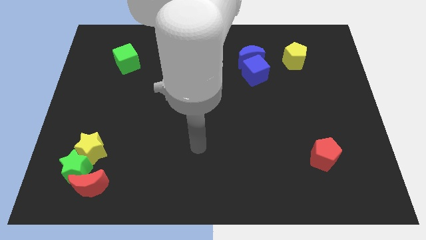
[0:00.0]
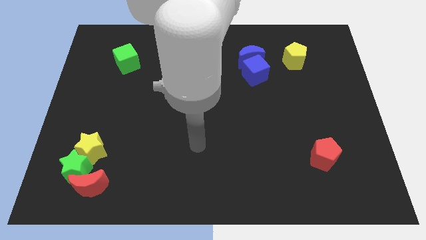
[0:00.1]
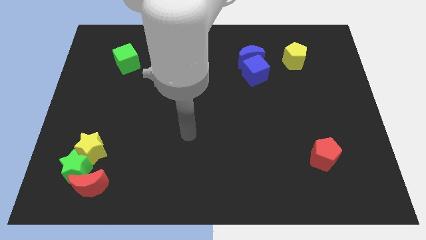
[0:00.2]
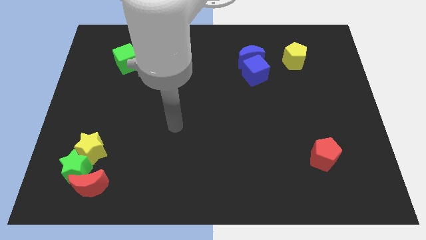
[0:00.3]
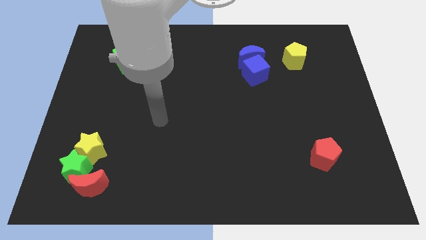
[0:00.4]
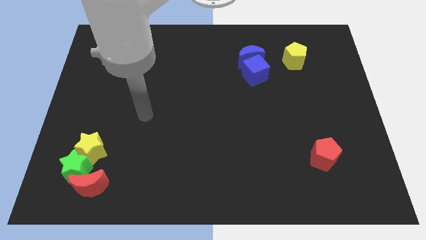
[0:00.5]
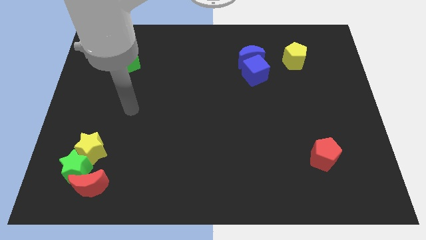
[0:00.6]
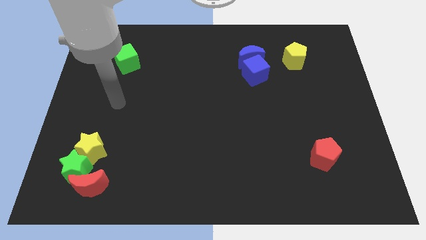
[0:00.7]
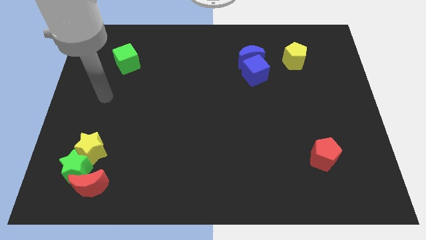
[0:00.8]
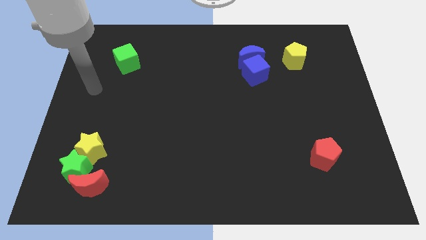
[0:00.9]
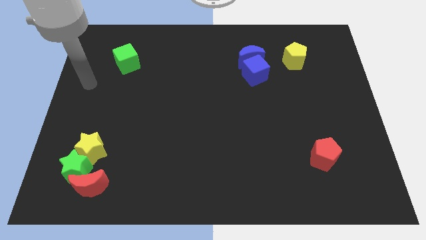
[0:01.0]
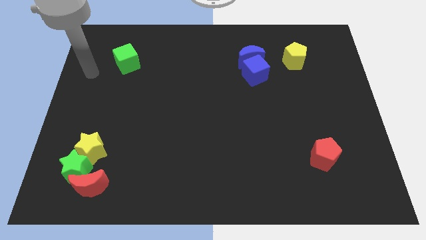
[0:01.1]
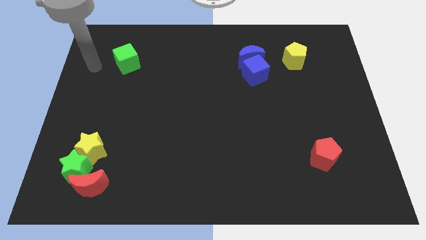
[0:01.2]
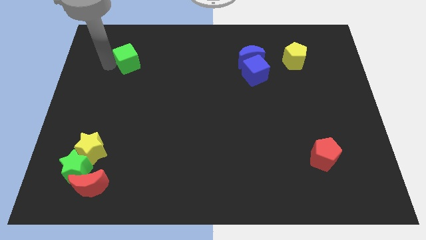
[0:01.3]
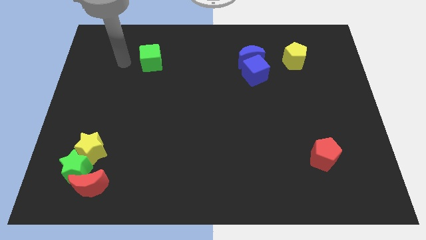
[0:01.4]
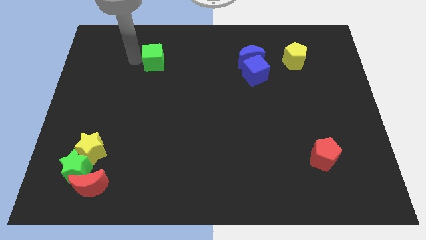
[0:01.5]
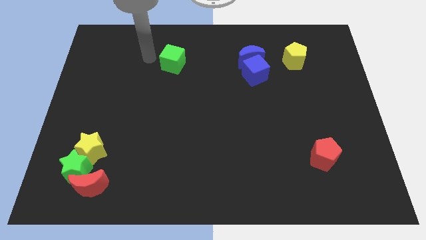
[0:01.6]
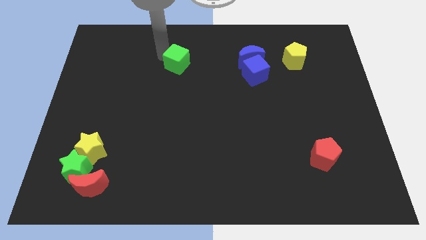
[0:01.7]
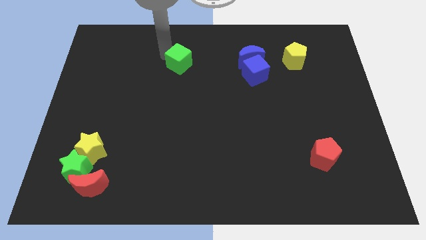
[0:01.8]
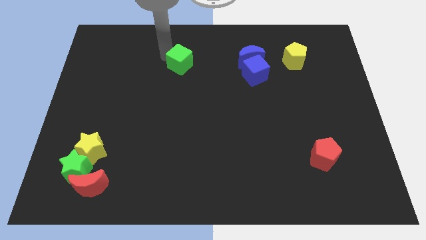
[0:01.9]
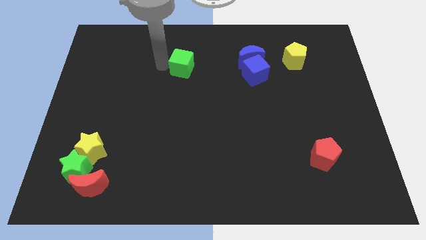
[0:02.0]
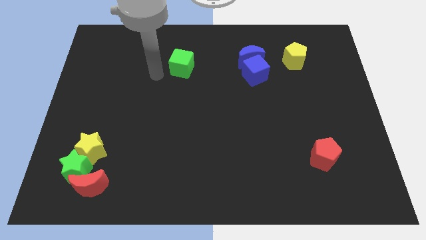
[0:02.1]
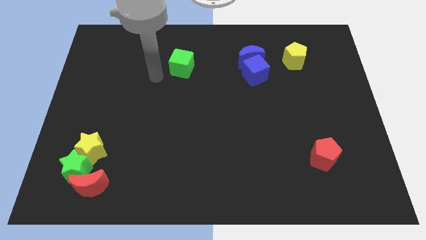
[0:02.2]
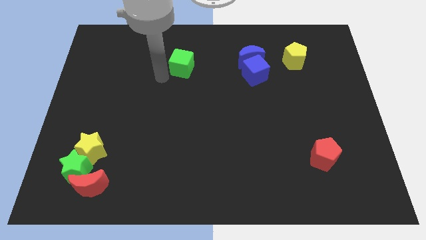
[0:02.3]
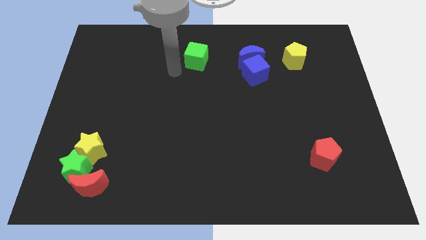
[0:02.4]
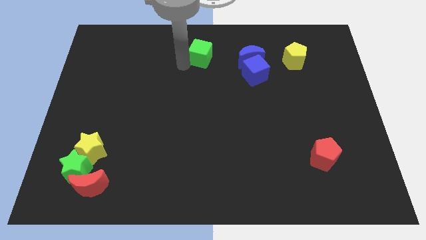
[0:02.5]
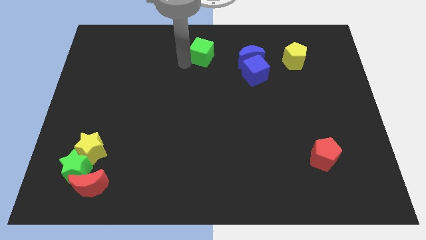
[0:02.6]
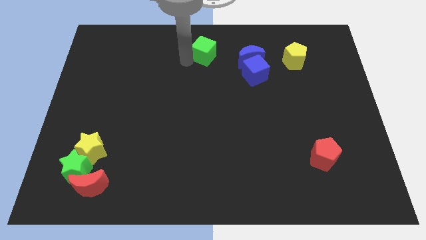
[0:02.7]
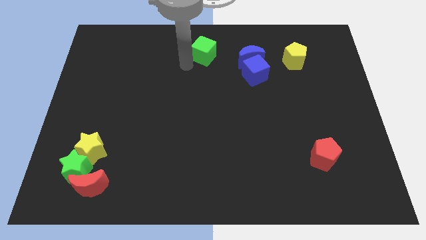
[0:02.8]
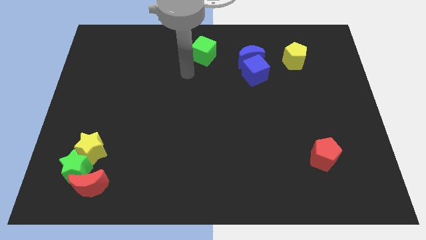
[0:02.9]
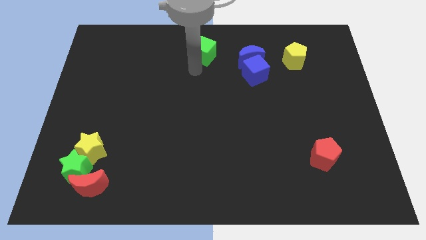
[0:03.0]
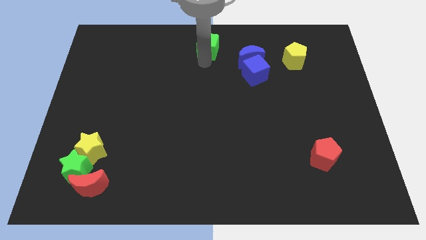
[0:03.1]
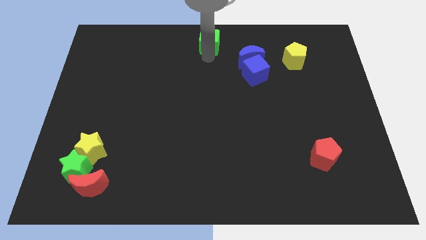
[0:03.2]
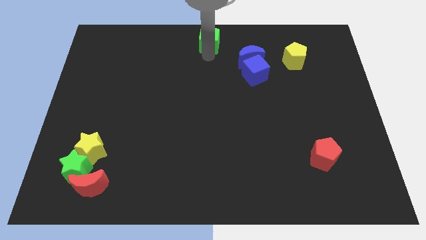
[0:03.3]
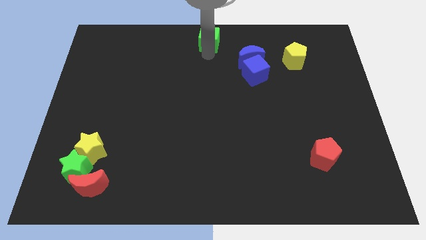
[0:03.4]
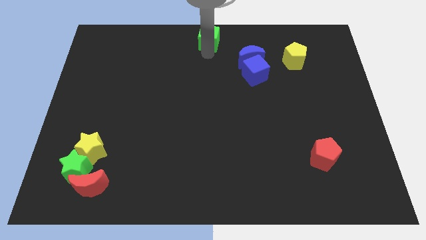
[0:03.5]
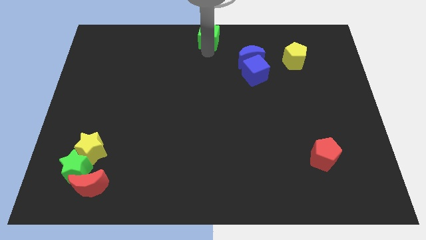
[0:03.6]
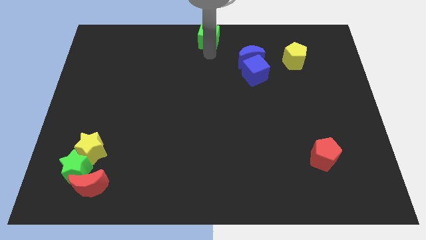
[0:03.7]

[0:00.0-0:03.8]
place the green cube at the top center of the board

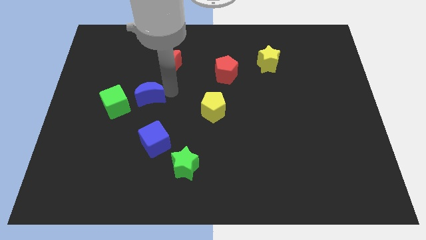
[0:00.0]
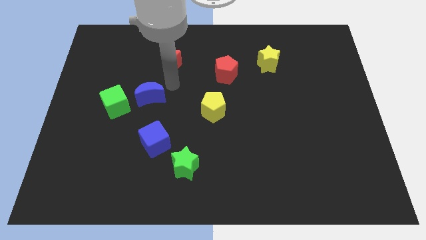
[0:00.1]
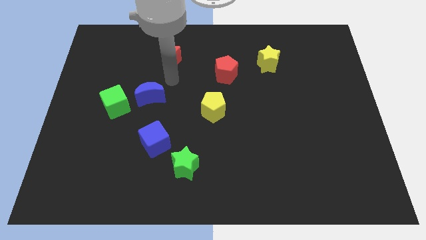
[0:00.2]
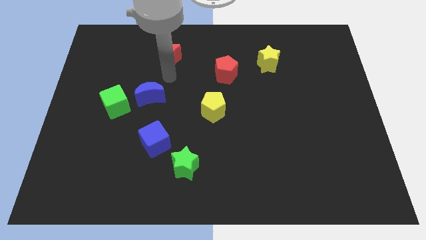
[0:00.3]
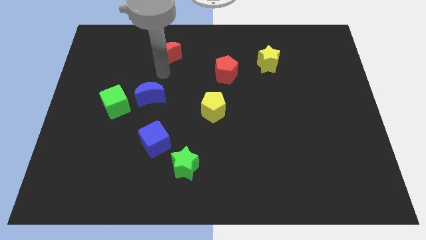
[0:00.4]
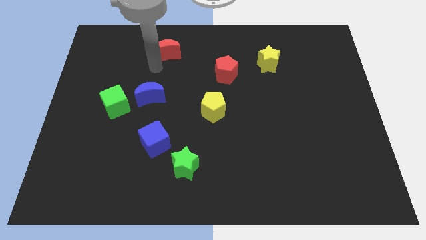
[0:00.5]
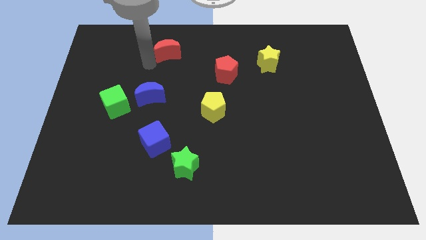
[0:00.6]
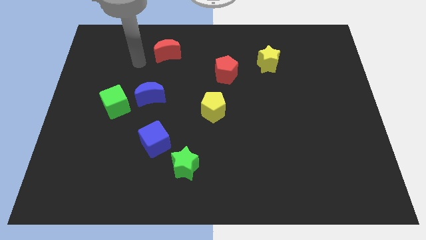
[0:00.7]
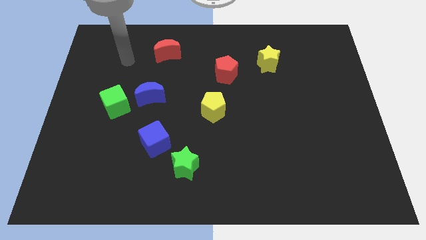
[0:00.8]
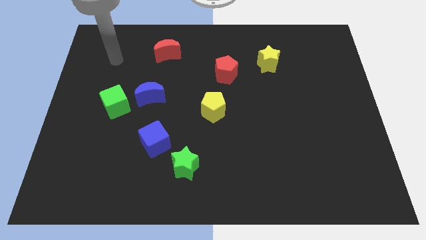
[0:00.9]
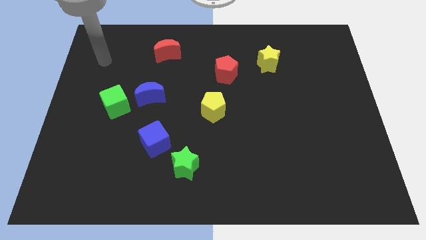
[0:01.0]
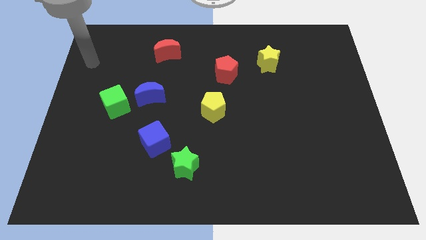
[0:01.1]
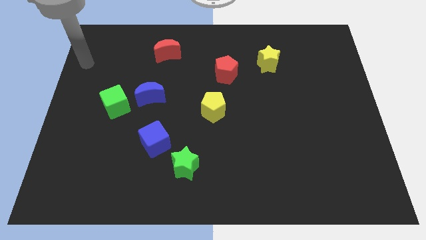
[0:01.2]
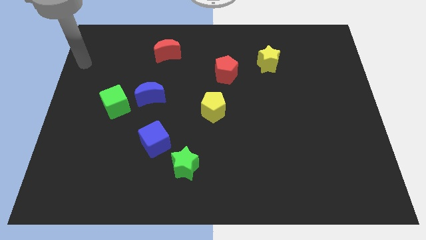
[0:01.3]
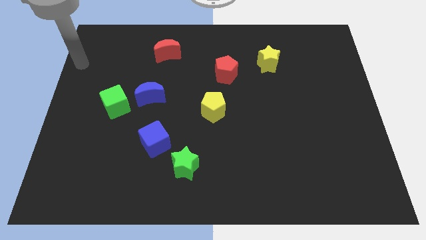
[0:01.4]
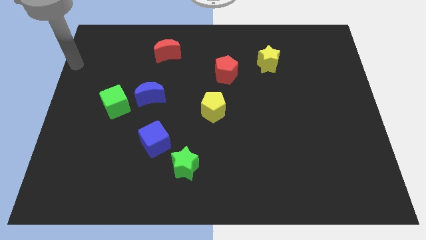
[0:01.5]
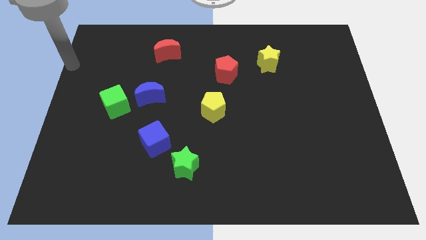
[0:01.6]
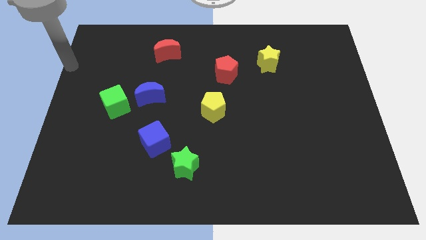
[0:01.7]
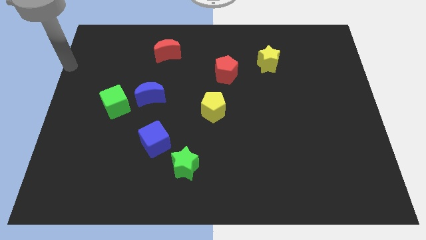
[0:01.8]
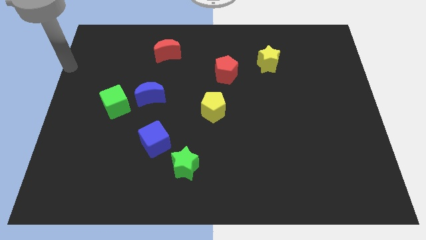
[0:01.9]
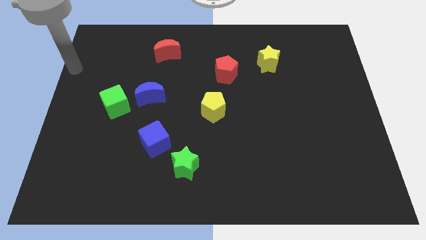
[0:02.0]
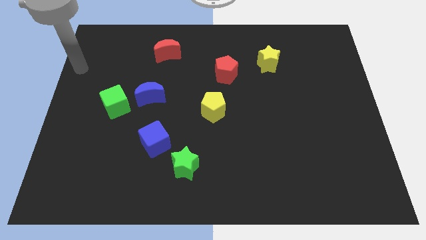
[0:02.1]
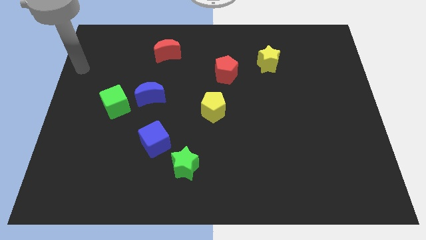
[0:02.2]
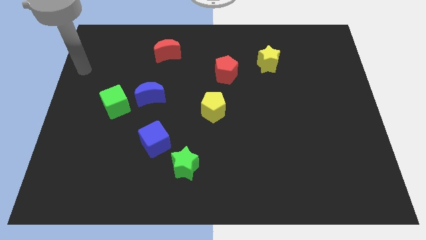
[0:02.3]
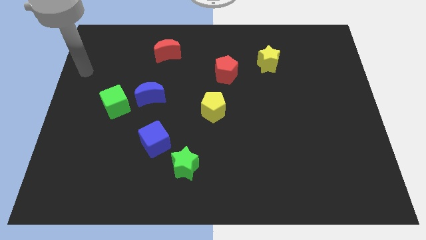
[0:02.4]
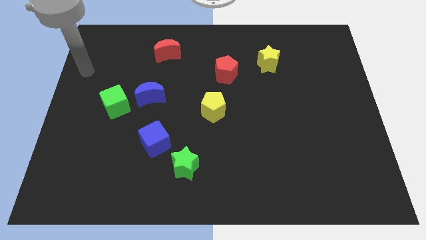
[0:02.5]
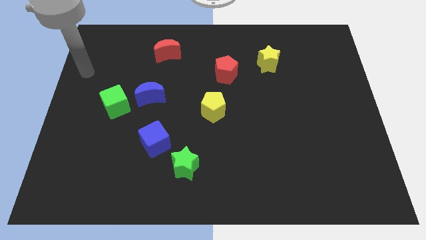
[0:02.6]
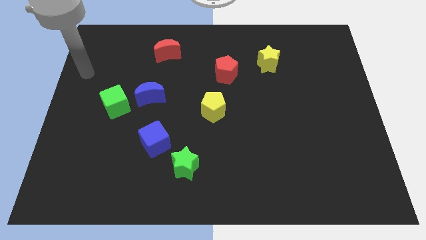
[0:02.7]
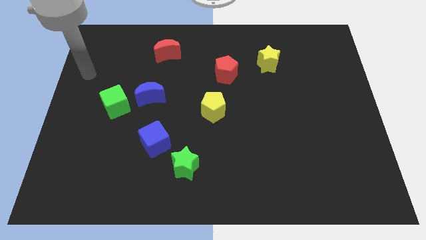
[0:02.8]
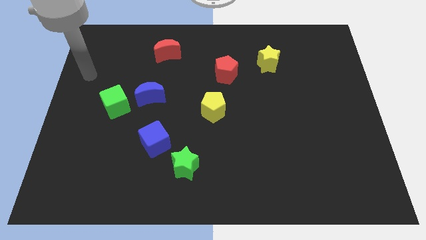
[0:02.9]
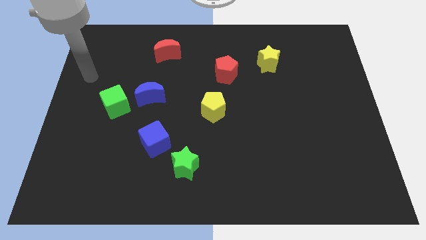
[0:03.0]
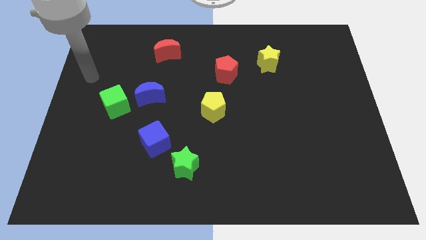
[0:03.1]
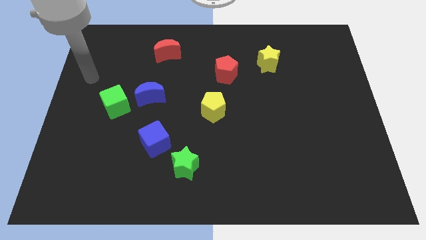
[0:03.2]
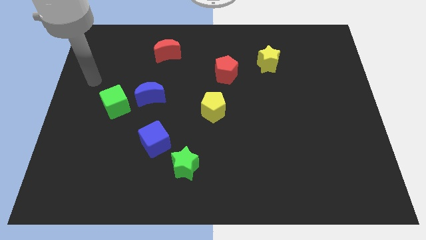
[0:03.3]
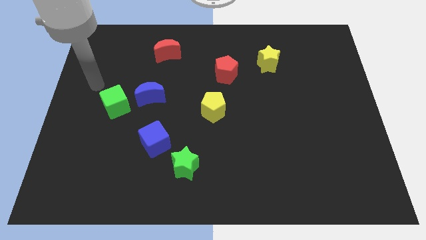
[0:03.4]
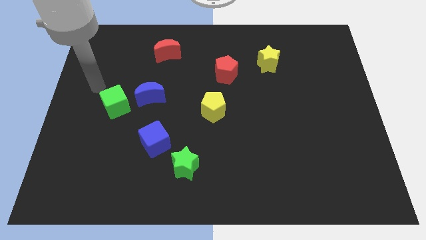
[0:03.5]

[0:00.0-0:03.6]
move the red moon slightly towards the above

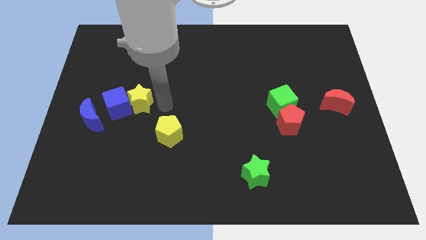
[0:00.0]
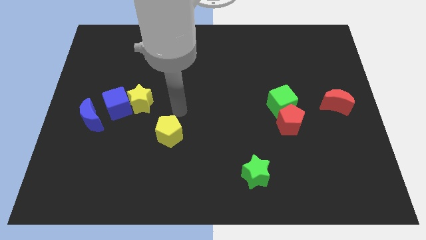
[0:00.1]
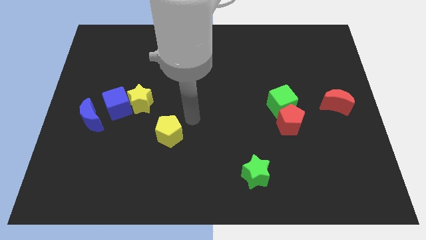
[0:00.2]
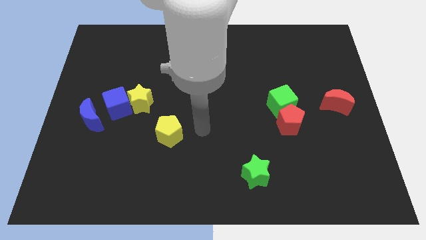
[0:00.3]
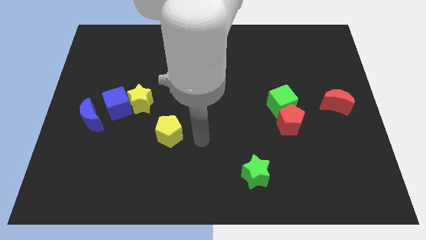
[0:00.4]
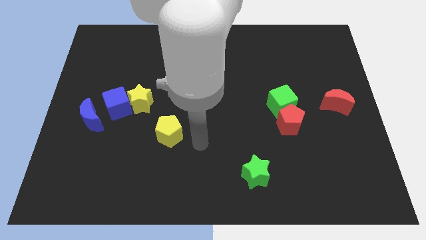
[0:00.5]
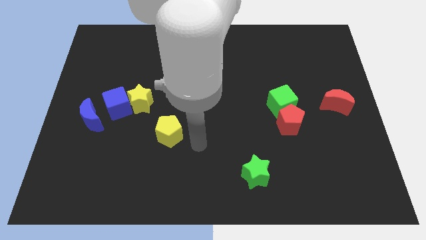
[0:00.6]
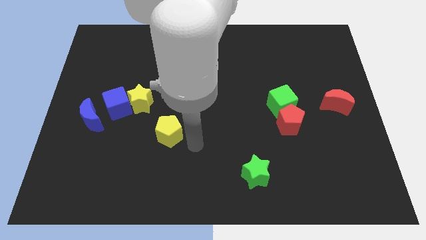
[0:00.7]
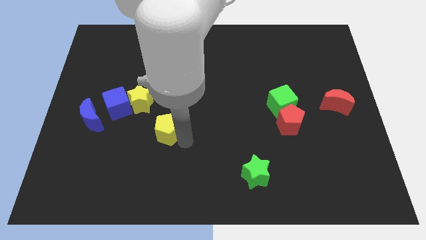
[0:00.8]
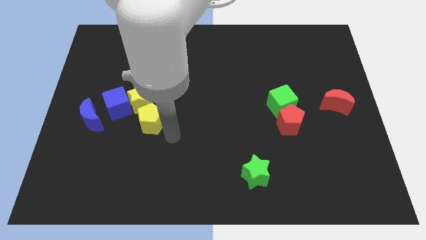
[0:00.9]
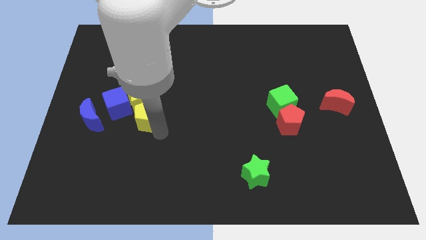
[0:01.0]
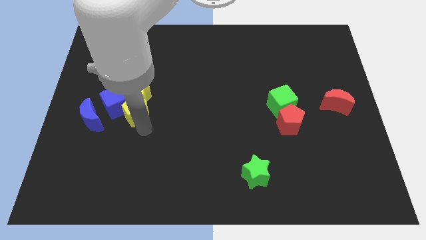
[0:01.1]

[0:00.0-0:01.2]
push the yellow pentagon into blue cube

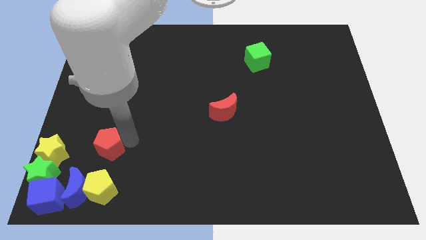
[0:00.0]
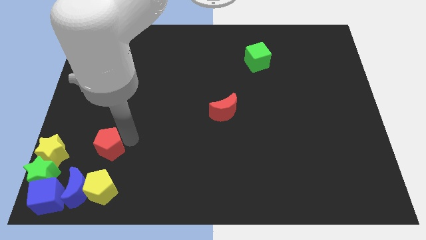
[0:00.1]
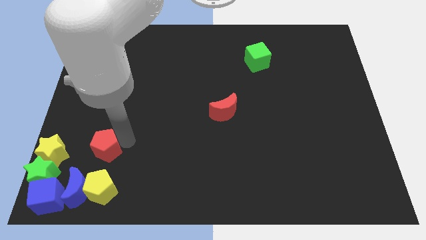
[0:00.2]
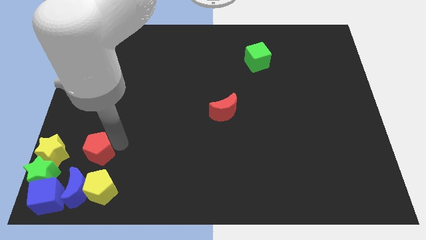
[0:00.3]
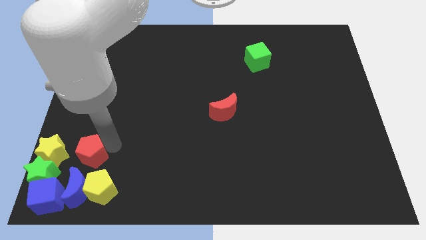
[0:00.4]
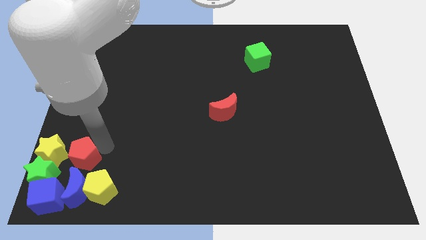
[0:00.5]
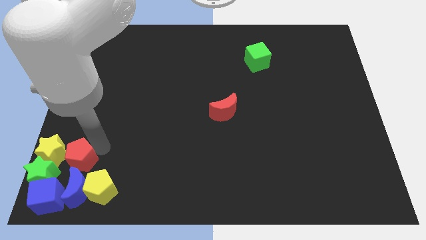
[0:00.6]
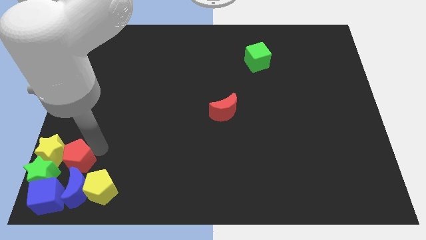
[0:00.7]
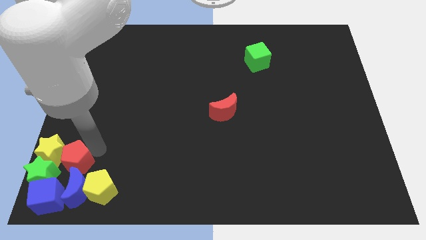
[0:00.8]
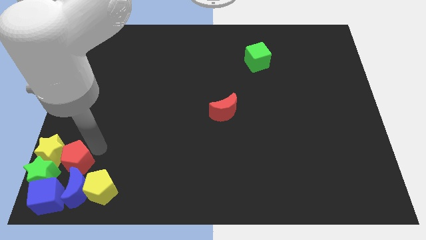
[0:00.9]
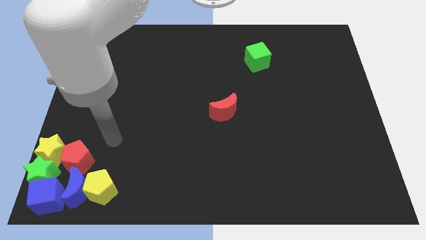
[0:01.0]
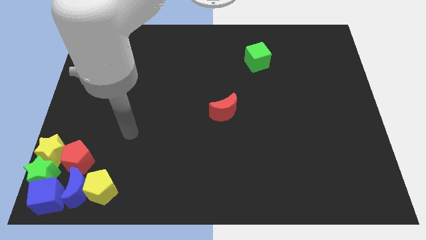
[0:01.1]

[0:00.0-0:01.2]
place red pentagon above blue crescent
